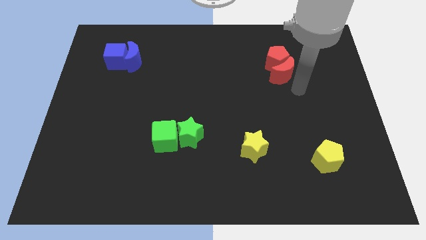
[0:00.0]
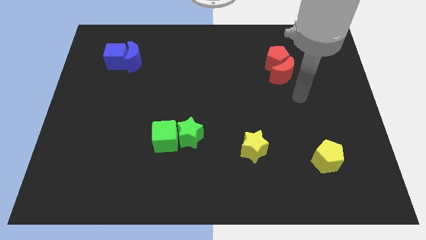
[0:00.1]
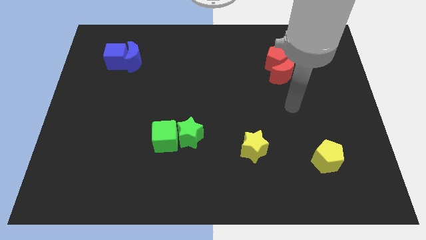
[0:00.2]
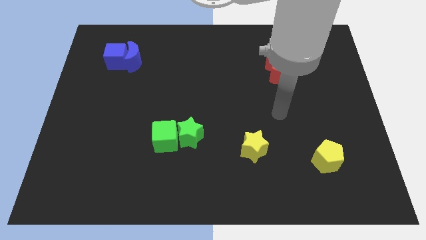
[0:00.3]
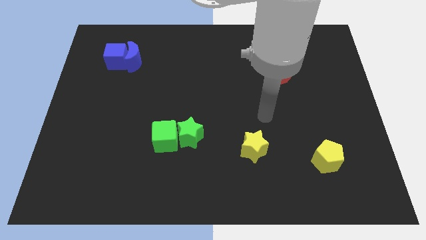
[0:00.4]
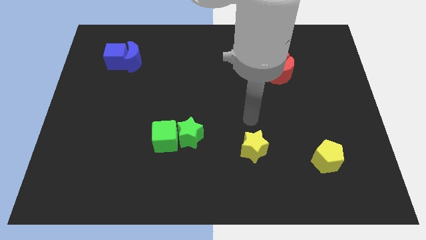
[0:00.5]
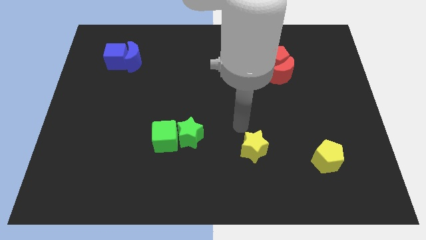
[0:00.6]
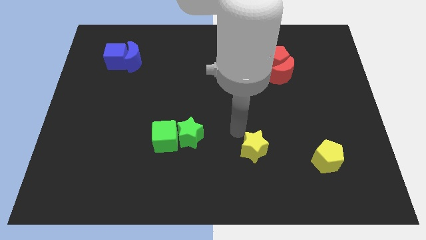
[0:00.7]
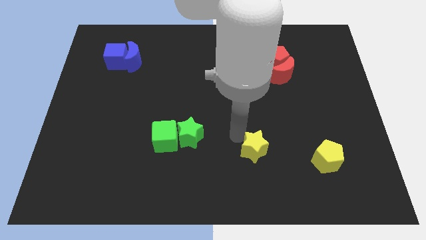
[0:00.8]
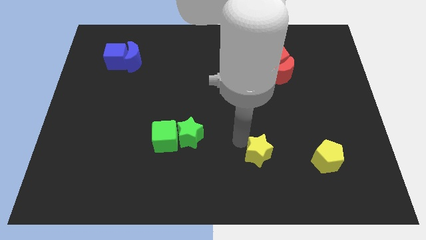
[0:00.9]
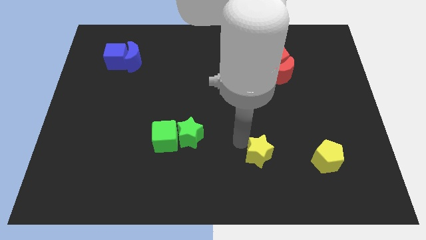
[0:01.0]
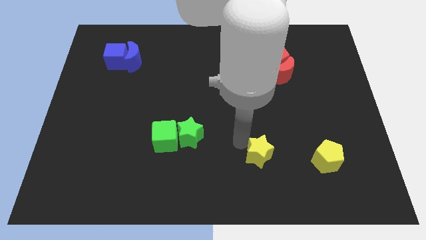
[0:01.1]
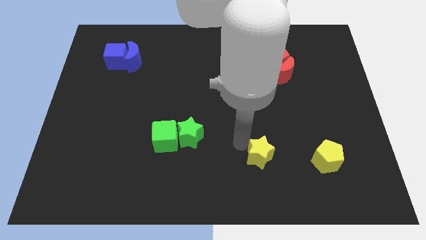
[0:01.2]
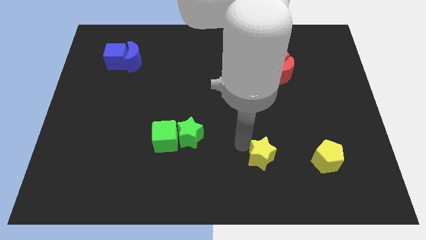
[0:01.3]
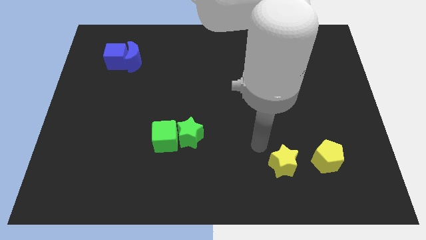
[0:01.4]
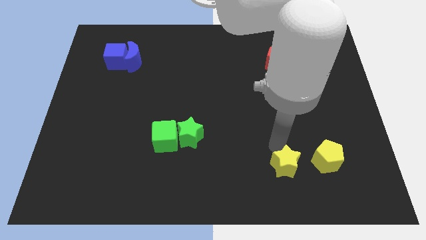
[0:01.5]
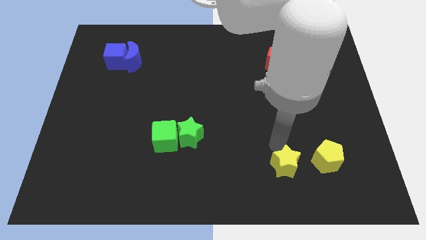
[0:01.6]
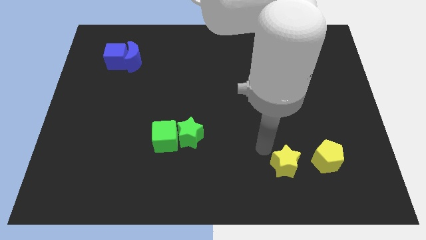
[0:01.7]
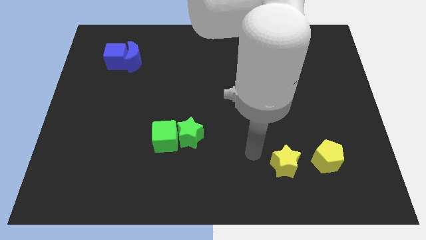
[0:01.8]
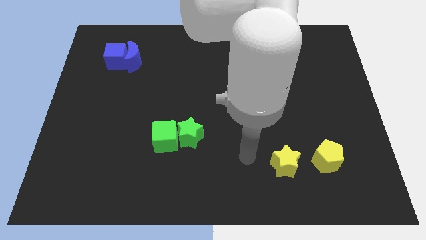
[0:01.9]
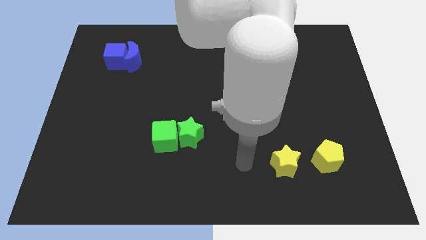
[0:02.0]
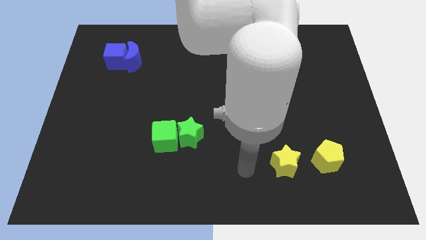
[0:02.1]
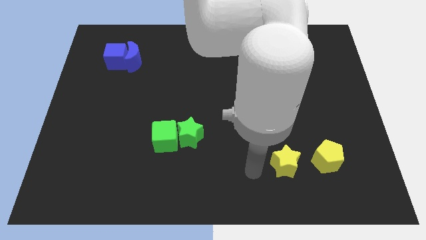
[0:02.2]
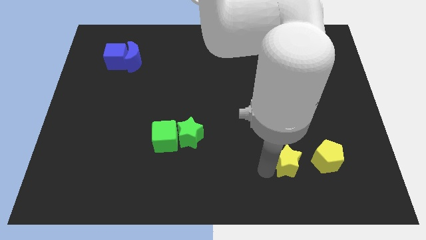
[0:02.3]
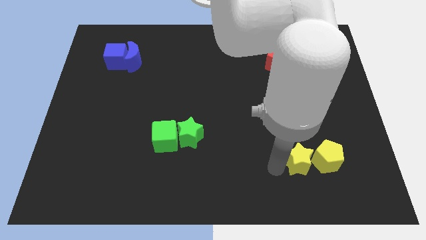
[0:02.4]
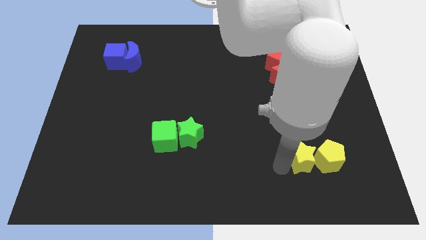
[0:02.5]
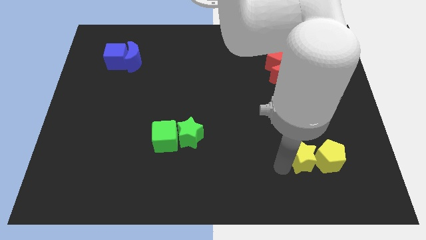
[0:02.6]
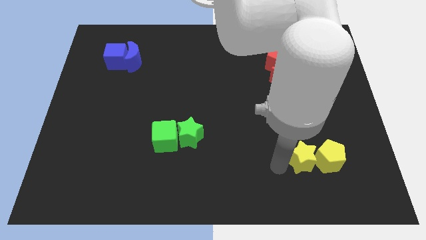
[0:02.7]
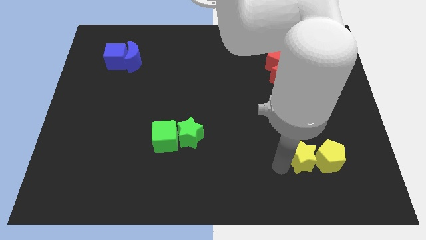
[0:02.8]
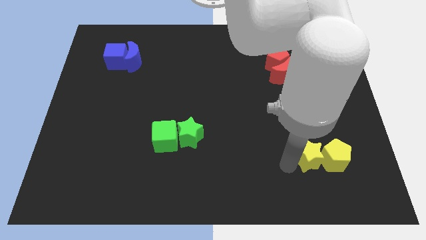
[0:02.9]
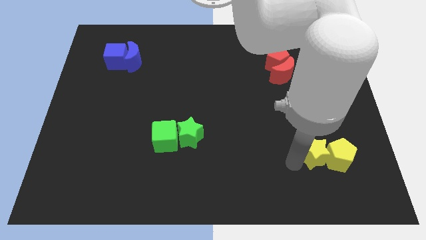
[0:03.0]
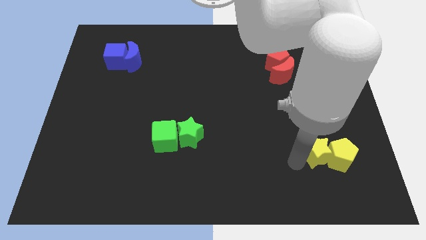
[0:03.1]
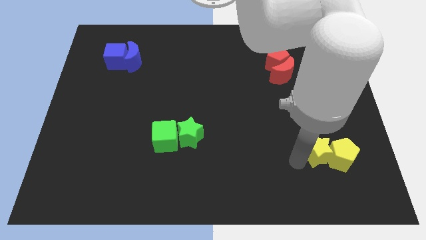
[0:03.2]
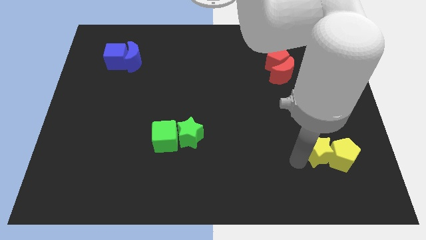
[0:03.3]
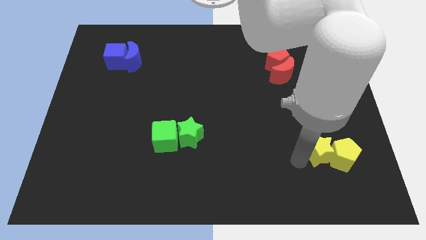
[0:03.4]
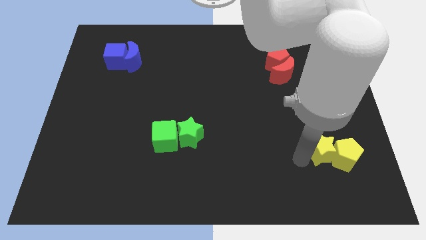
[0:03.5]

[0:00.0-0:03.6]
push the yellow blocks towards the right side of the board

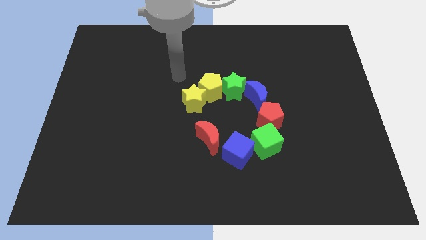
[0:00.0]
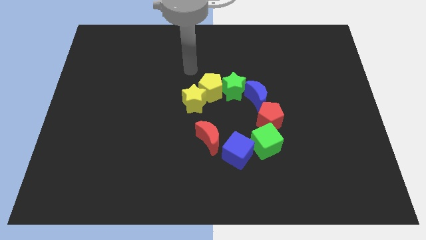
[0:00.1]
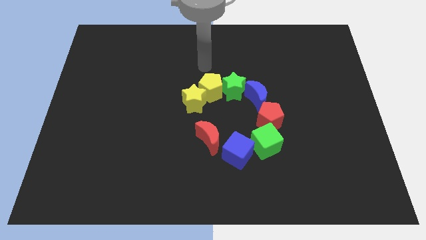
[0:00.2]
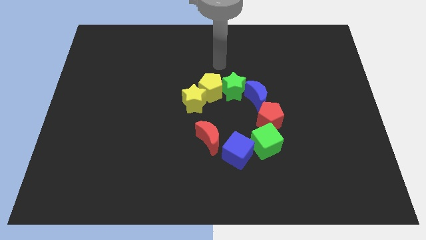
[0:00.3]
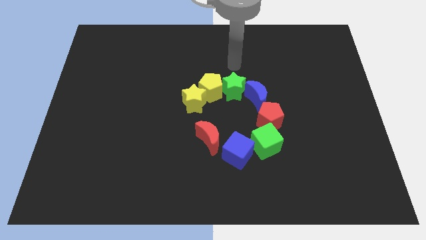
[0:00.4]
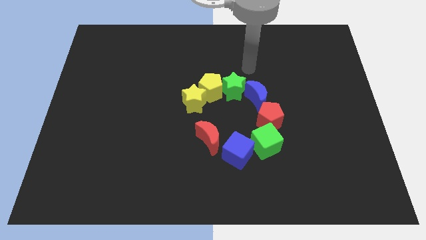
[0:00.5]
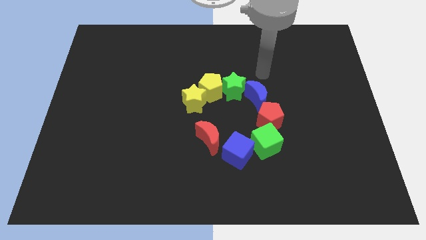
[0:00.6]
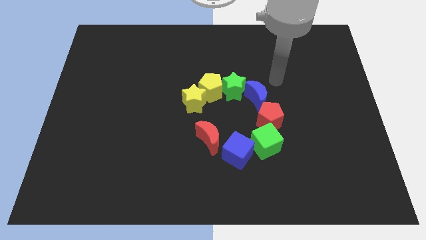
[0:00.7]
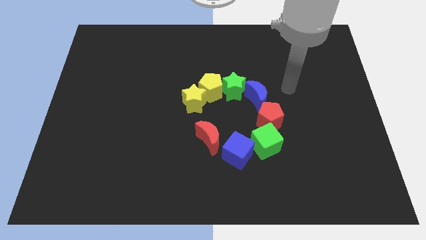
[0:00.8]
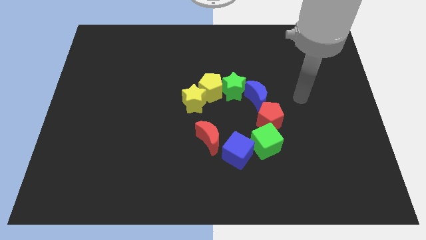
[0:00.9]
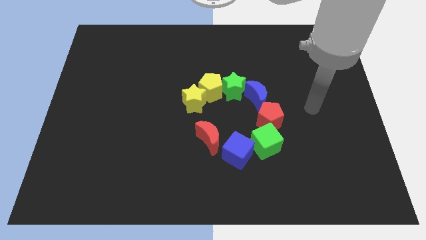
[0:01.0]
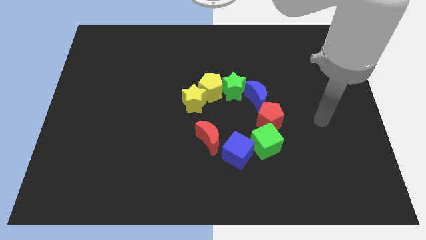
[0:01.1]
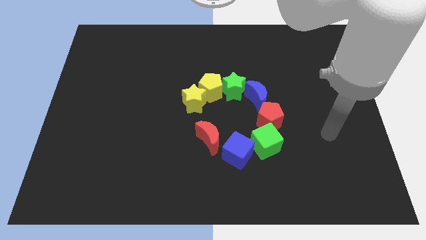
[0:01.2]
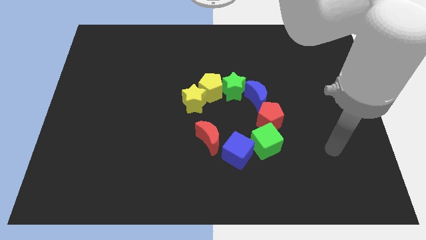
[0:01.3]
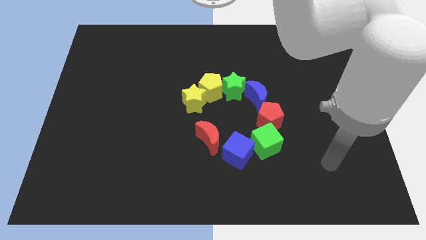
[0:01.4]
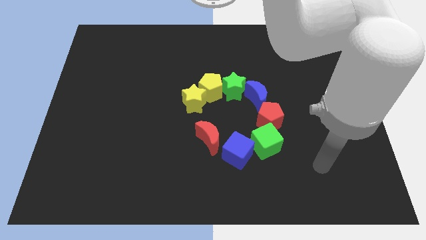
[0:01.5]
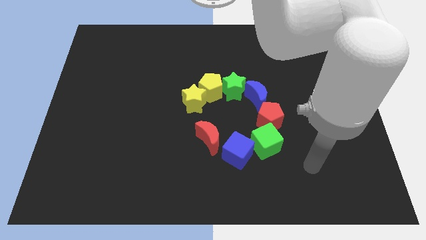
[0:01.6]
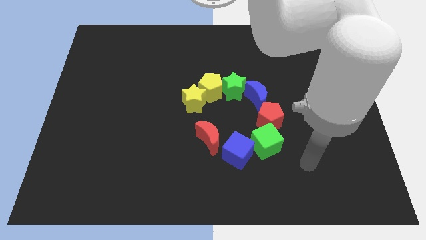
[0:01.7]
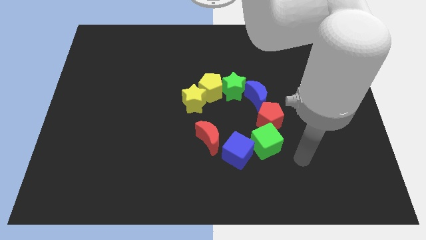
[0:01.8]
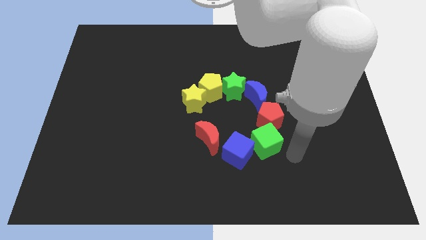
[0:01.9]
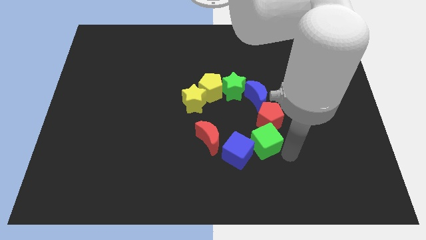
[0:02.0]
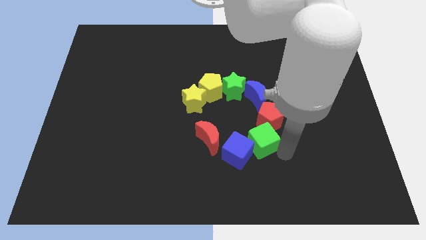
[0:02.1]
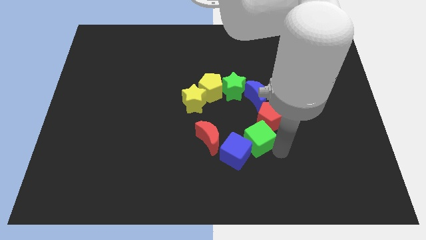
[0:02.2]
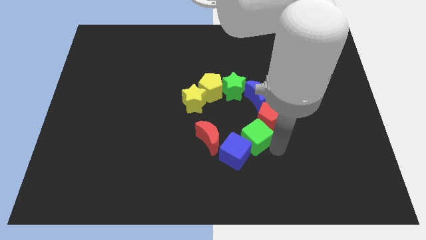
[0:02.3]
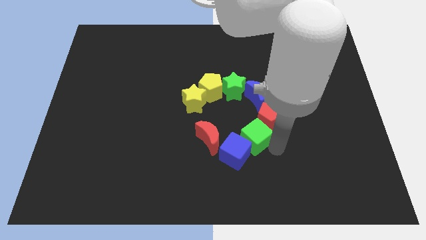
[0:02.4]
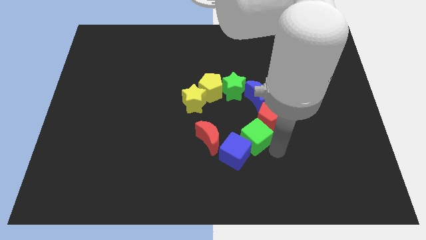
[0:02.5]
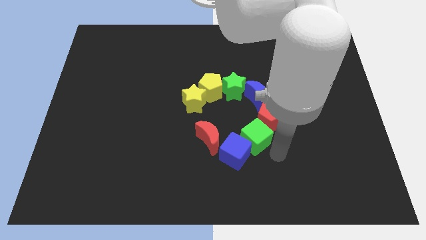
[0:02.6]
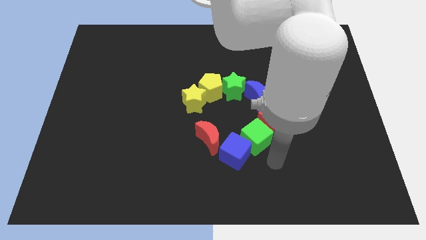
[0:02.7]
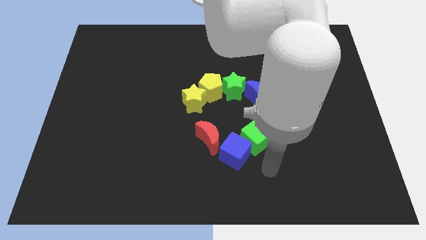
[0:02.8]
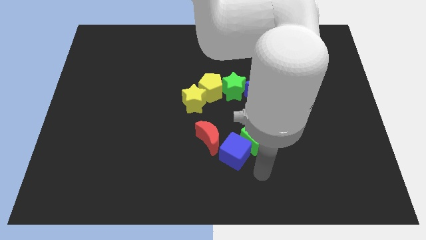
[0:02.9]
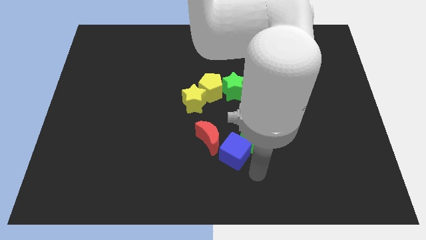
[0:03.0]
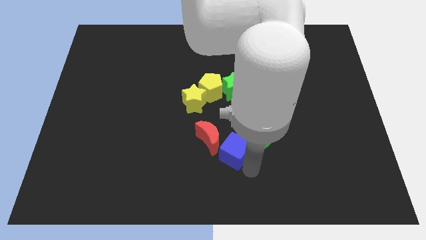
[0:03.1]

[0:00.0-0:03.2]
move green cube into red pentagon and blue cube

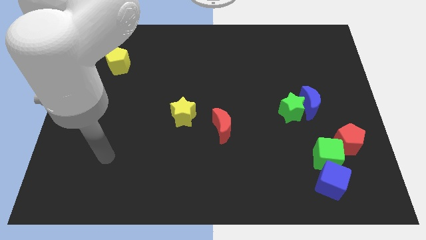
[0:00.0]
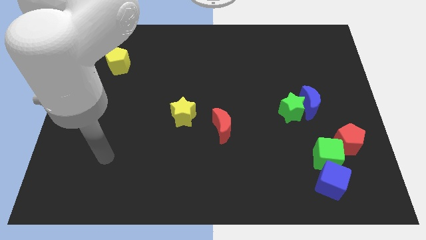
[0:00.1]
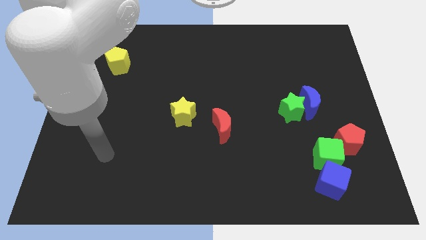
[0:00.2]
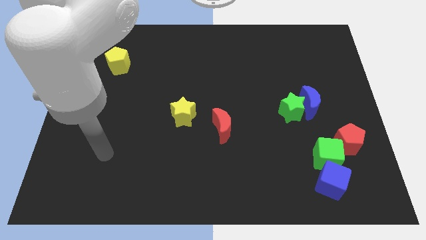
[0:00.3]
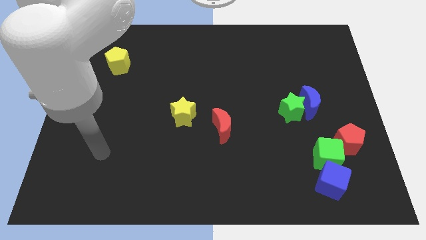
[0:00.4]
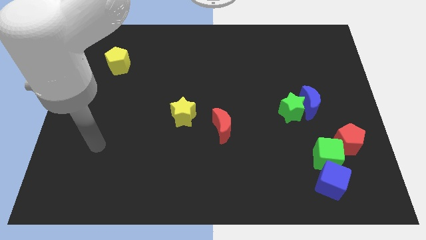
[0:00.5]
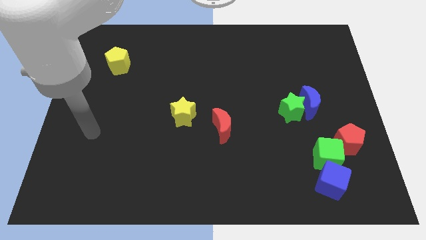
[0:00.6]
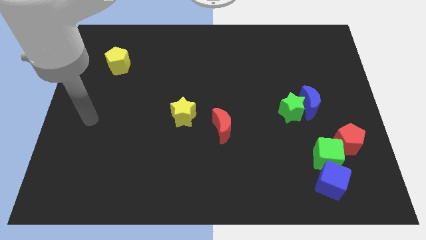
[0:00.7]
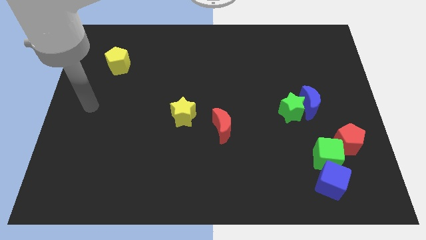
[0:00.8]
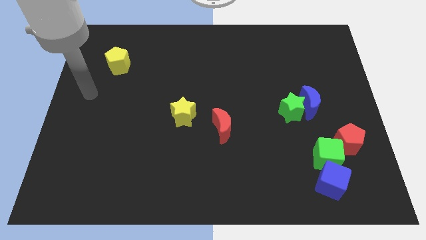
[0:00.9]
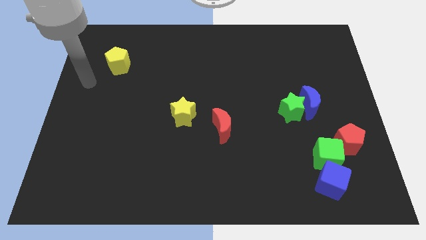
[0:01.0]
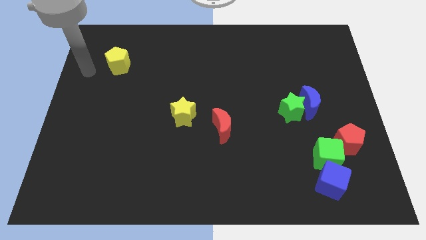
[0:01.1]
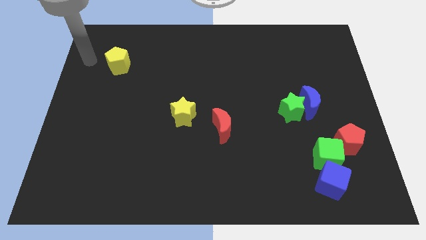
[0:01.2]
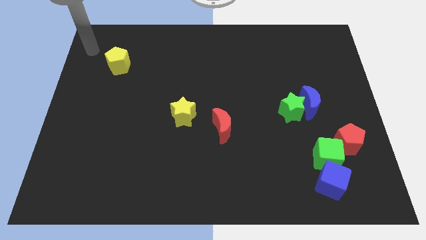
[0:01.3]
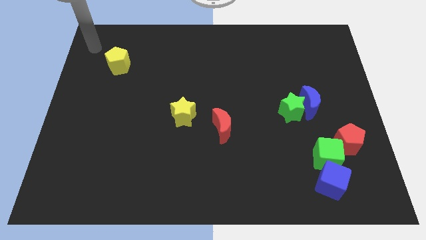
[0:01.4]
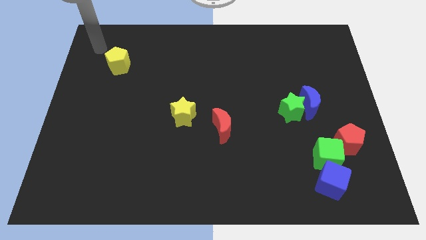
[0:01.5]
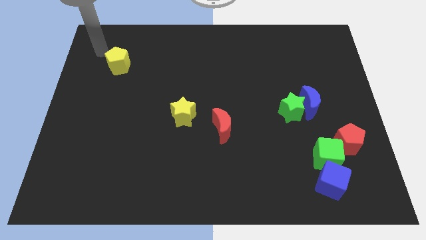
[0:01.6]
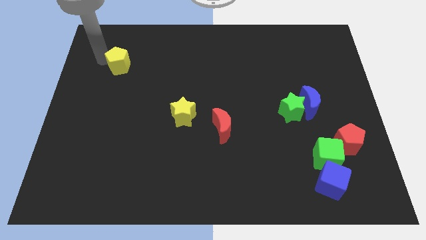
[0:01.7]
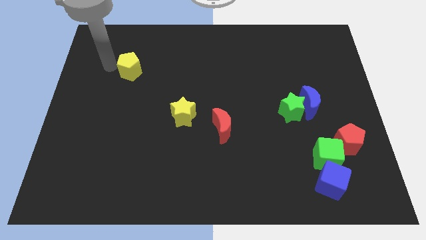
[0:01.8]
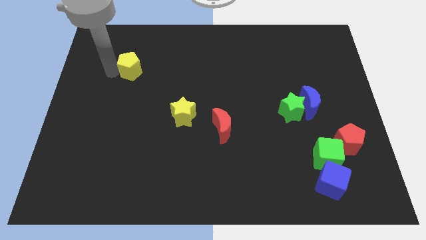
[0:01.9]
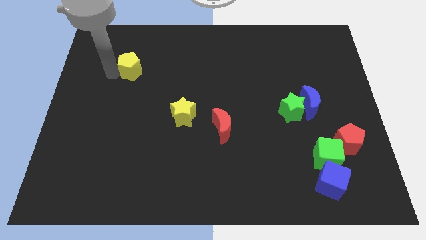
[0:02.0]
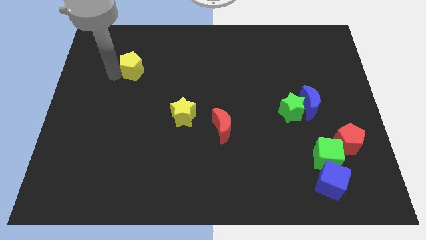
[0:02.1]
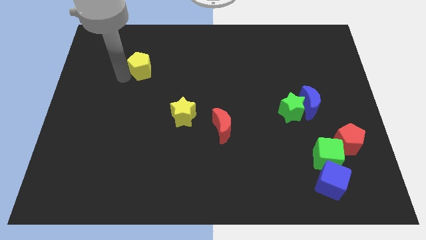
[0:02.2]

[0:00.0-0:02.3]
move the yellow pentagon diagonally to the yellow star
